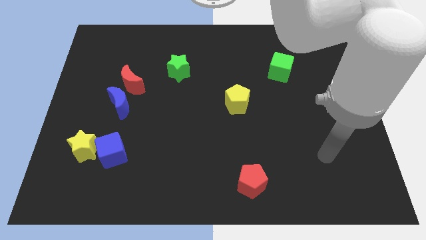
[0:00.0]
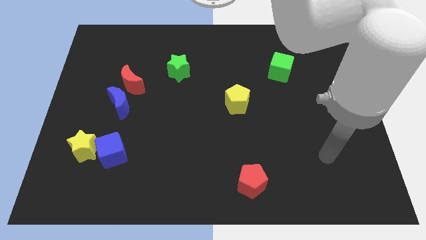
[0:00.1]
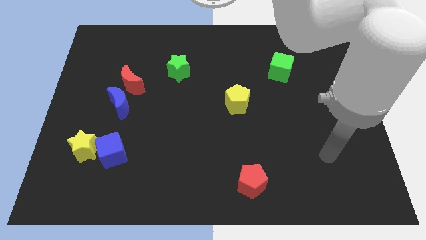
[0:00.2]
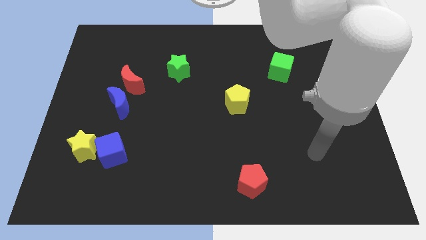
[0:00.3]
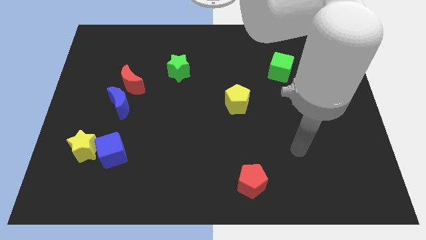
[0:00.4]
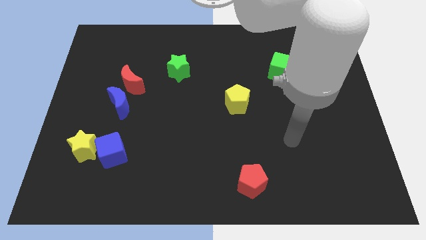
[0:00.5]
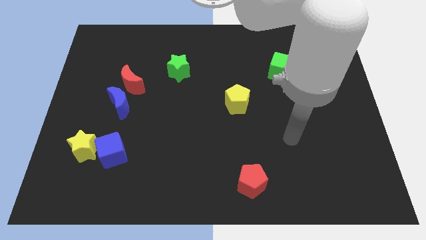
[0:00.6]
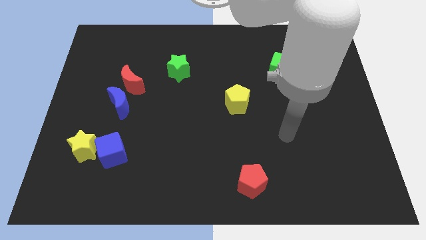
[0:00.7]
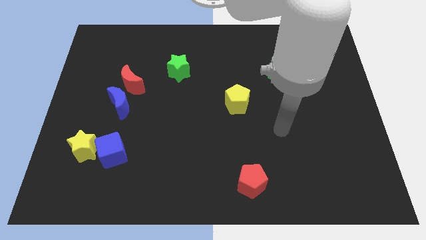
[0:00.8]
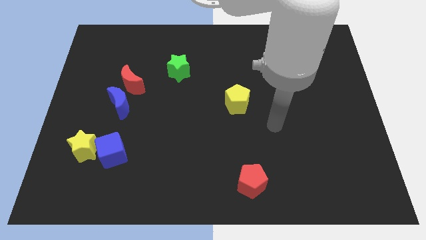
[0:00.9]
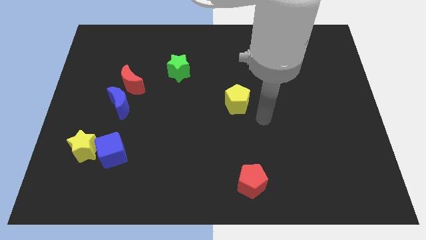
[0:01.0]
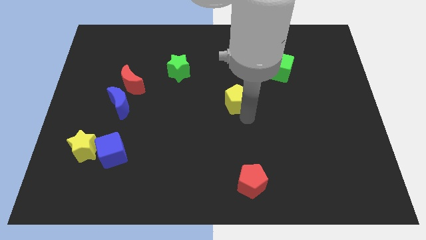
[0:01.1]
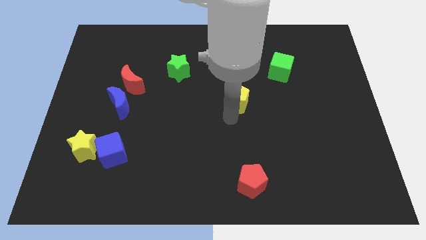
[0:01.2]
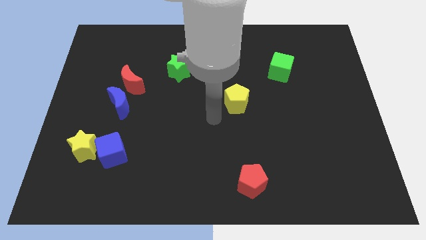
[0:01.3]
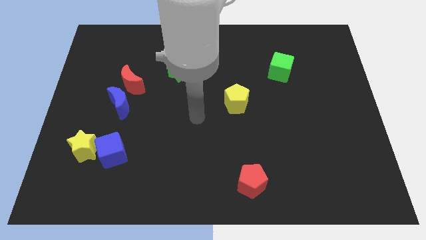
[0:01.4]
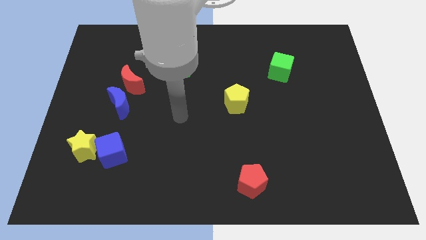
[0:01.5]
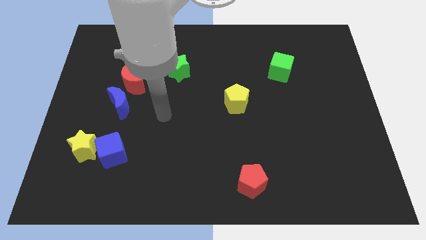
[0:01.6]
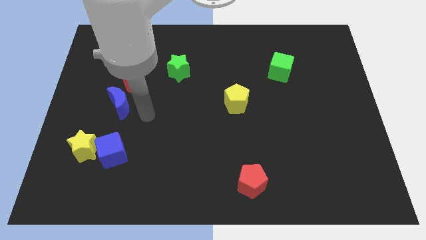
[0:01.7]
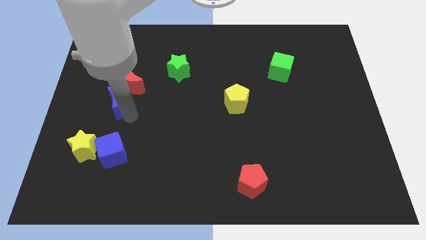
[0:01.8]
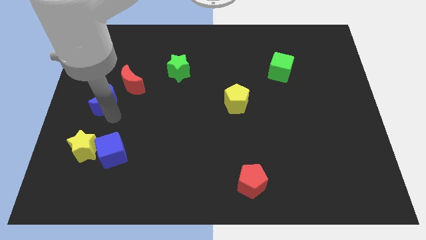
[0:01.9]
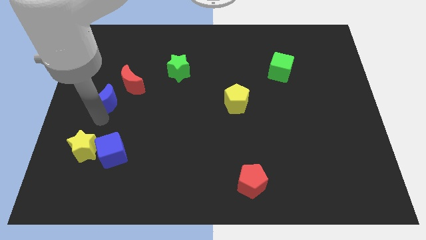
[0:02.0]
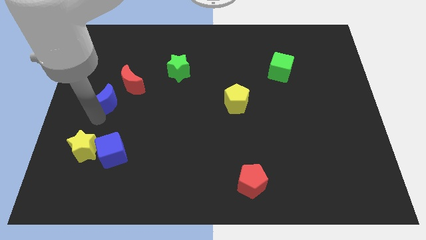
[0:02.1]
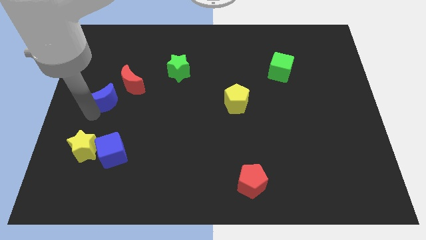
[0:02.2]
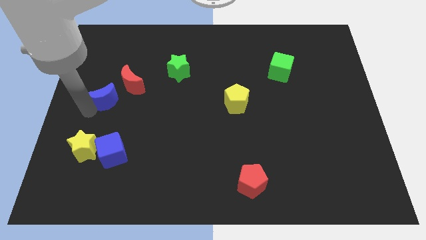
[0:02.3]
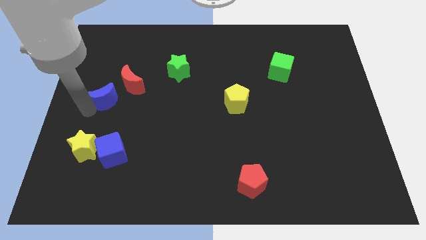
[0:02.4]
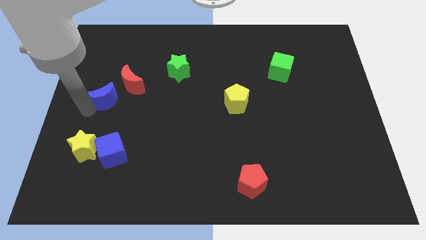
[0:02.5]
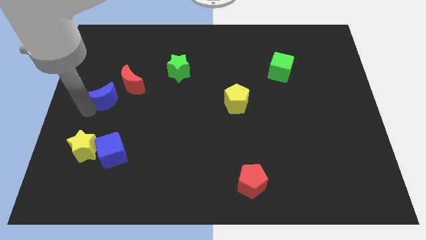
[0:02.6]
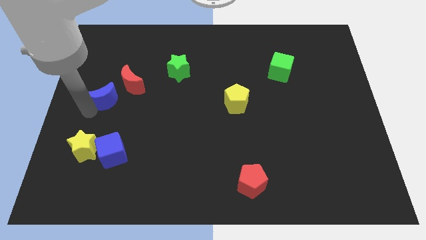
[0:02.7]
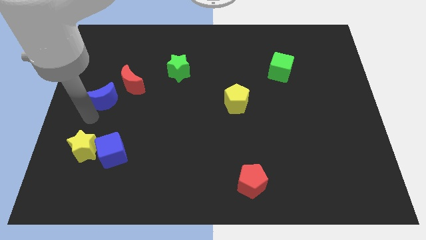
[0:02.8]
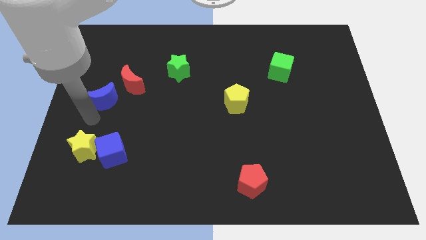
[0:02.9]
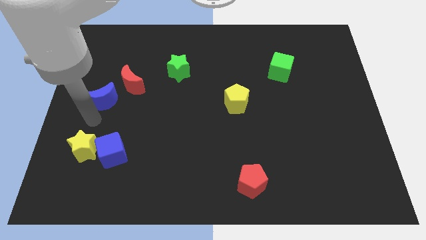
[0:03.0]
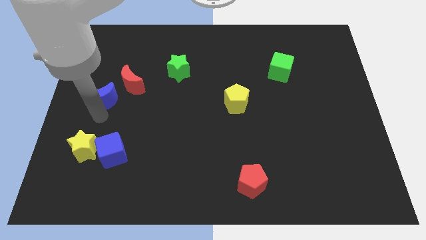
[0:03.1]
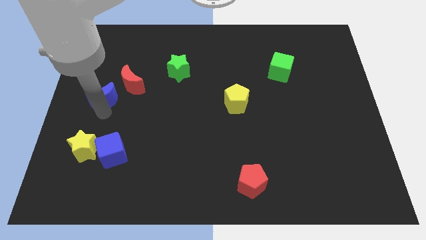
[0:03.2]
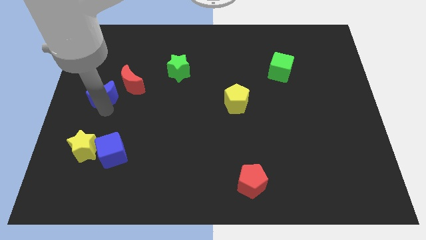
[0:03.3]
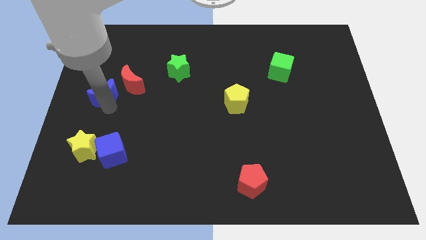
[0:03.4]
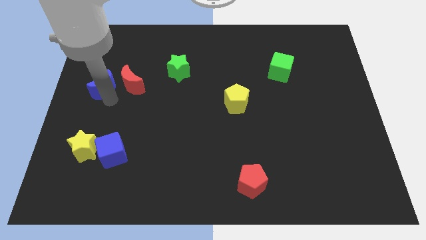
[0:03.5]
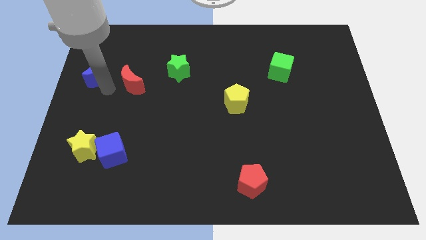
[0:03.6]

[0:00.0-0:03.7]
place the blue moon parallel left to the red moon

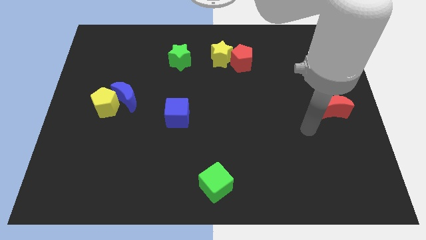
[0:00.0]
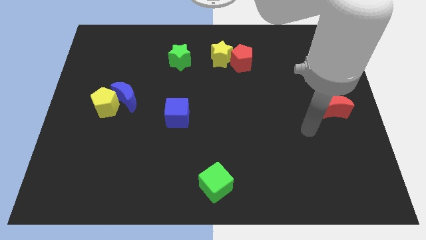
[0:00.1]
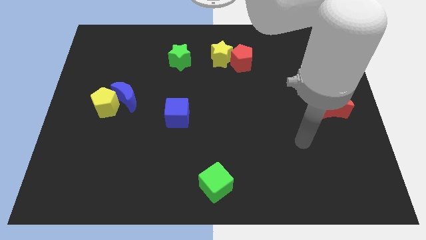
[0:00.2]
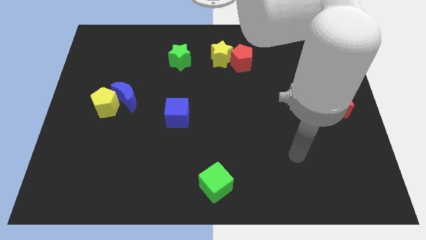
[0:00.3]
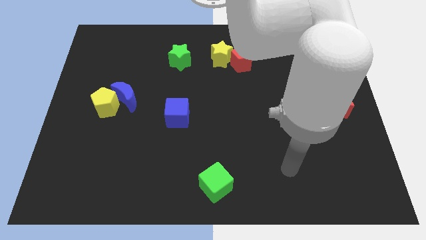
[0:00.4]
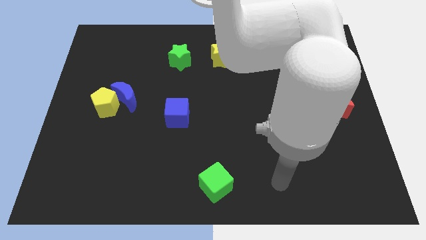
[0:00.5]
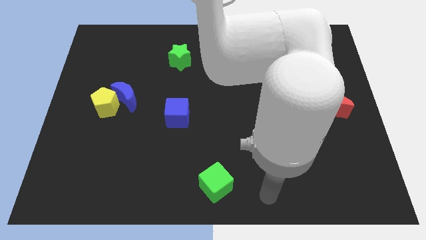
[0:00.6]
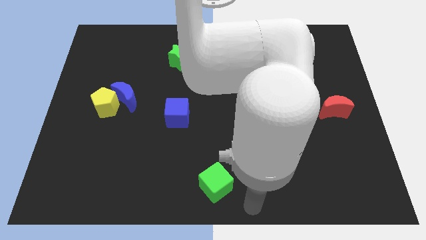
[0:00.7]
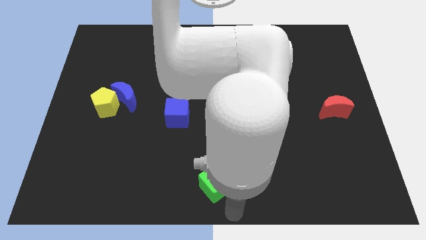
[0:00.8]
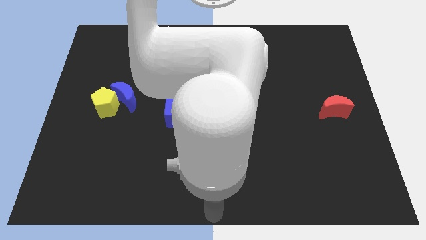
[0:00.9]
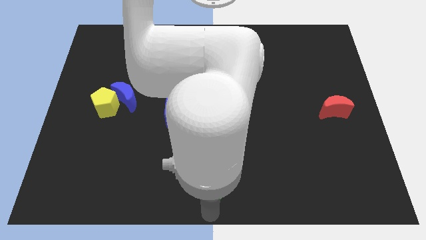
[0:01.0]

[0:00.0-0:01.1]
go and point your hand below the green cube

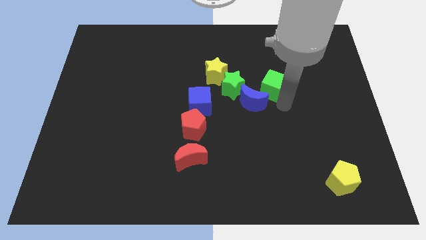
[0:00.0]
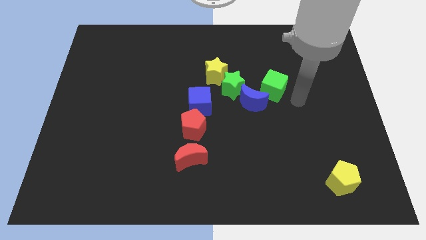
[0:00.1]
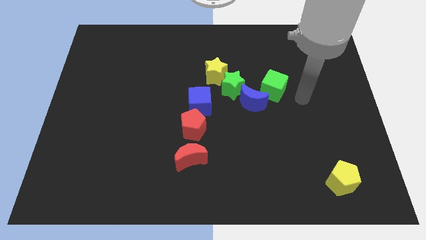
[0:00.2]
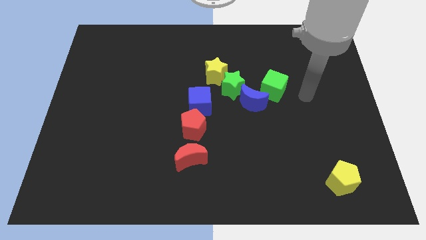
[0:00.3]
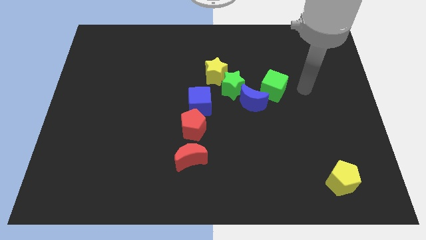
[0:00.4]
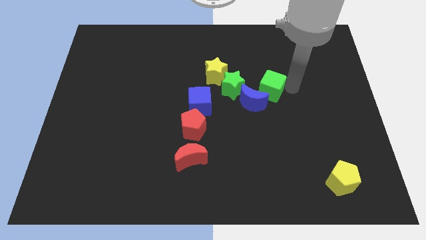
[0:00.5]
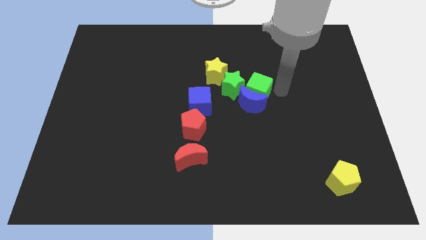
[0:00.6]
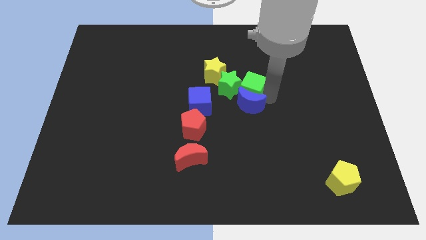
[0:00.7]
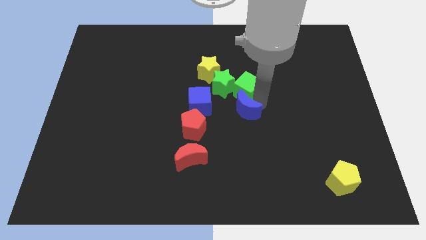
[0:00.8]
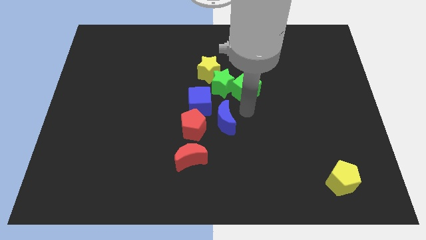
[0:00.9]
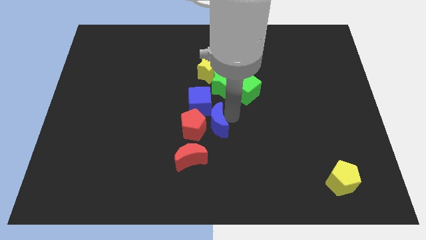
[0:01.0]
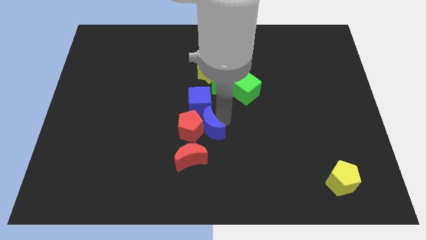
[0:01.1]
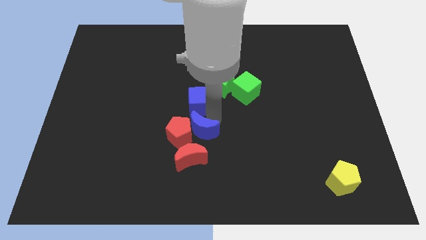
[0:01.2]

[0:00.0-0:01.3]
separate the blue moon towards red pentagon

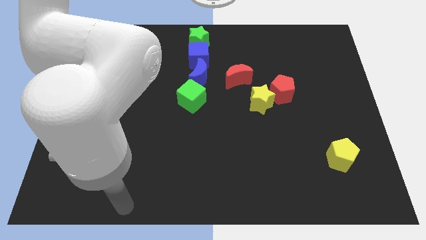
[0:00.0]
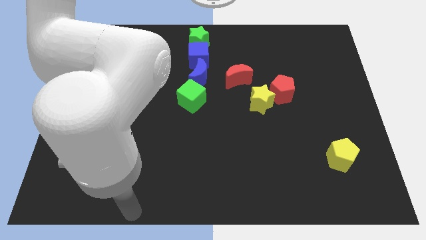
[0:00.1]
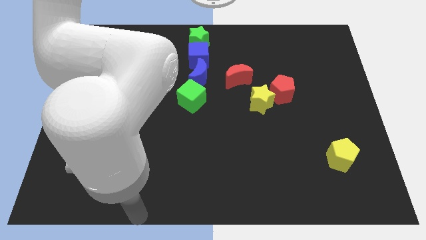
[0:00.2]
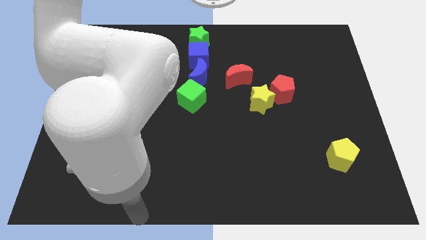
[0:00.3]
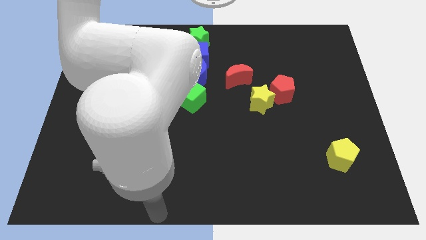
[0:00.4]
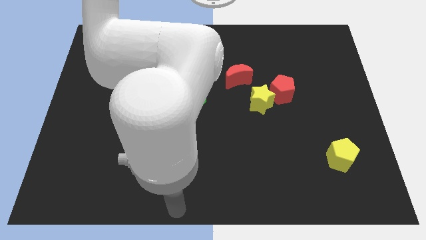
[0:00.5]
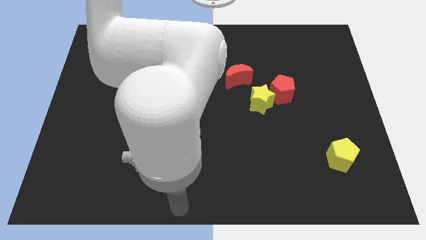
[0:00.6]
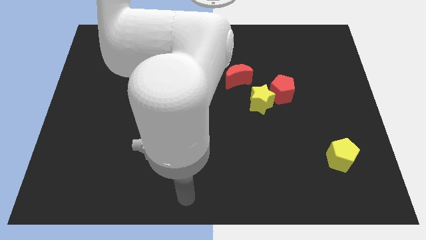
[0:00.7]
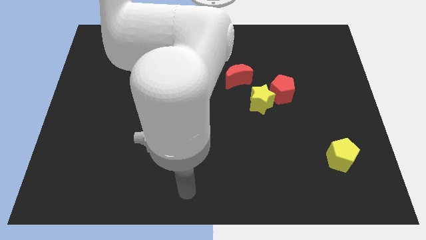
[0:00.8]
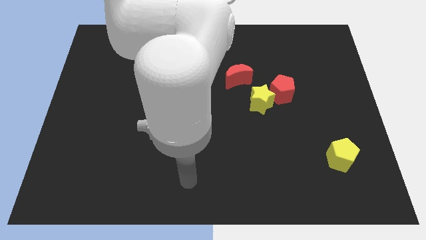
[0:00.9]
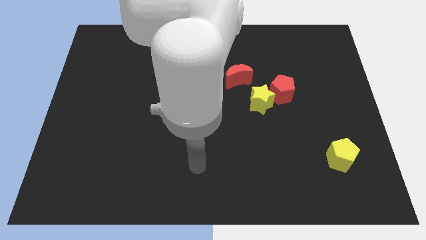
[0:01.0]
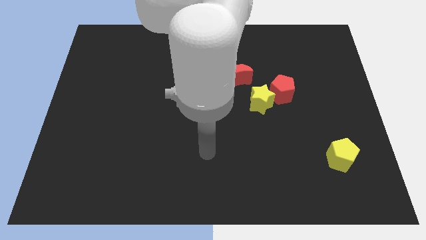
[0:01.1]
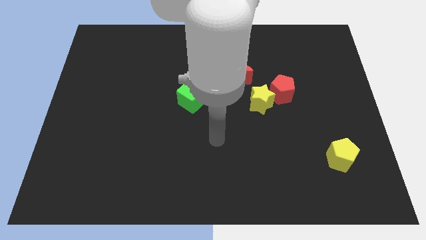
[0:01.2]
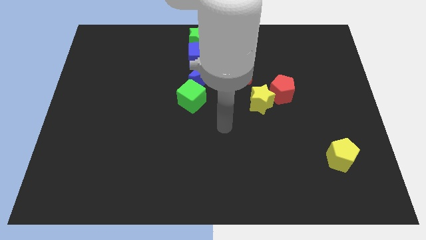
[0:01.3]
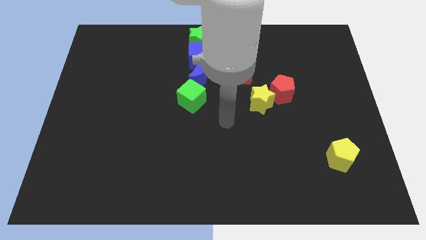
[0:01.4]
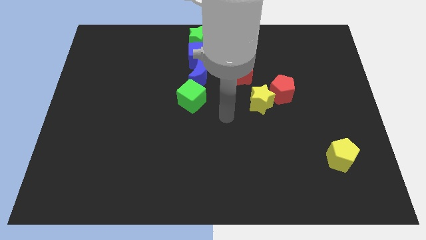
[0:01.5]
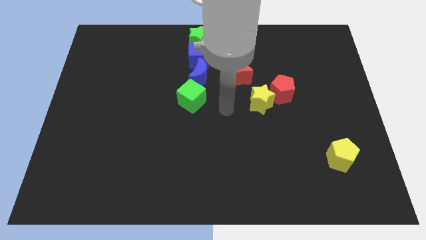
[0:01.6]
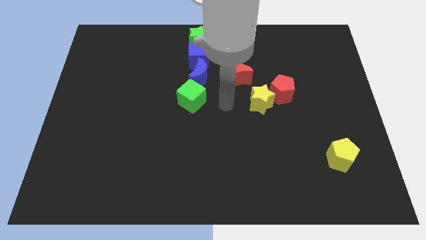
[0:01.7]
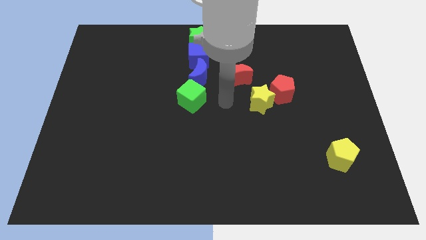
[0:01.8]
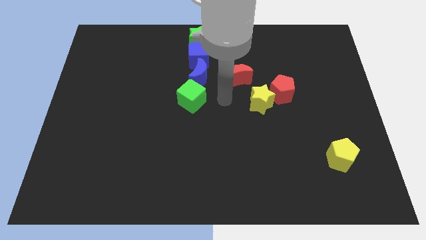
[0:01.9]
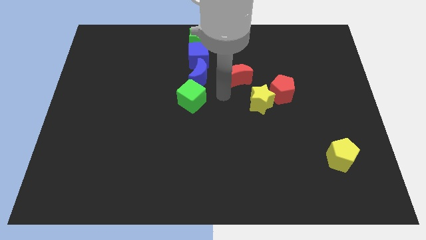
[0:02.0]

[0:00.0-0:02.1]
move the arm vertically towards the center side

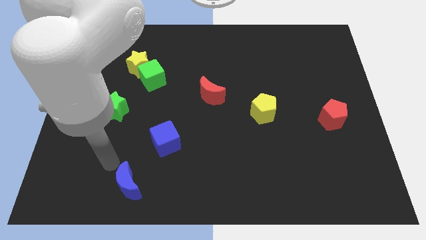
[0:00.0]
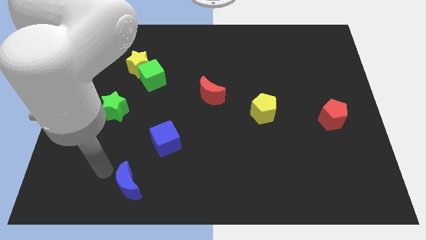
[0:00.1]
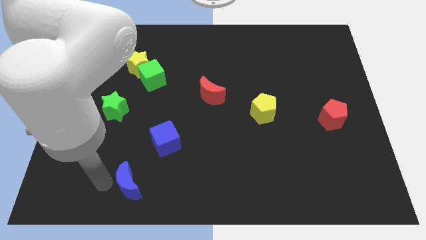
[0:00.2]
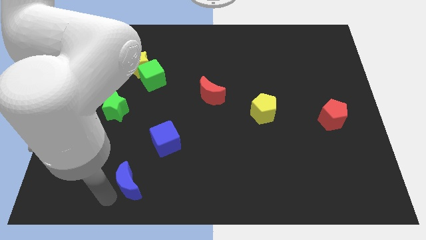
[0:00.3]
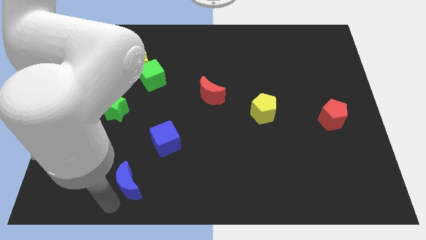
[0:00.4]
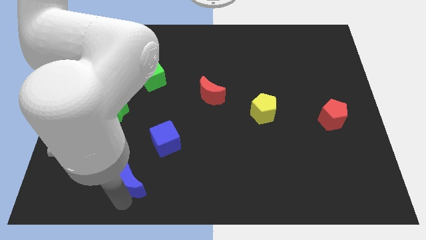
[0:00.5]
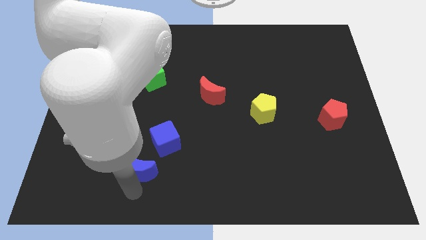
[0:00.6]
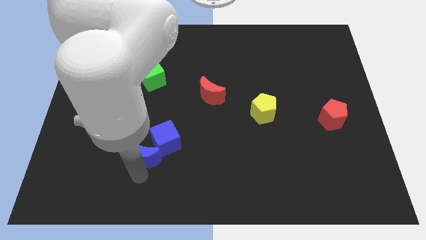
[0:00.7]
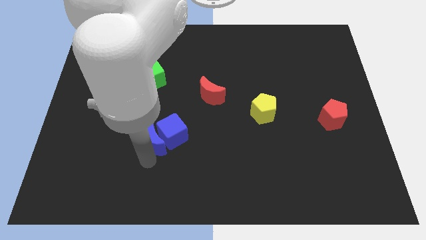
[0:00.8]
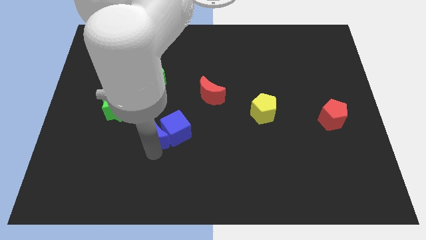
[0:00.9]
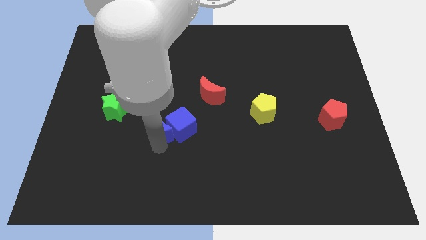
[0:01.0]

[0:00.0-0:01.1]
push the blue crescent into the blue cube
